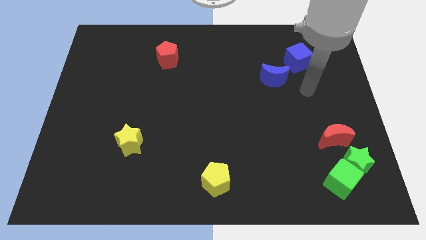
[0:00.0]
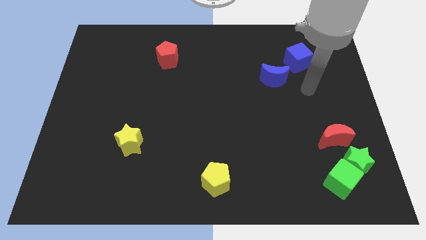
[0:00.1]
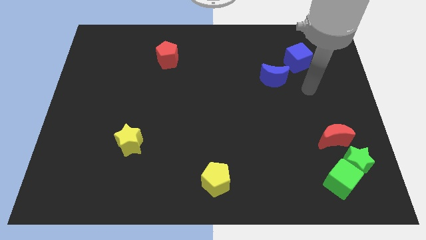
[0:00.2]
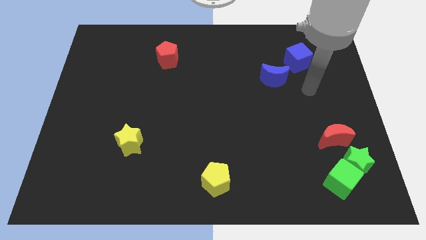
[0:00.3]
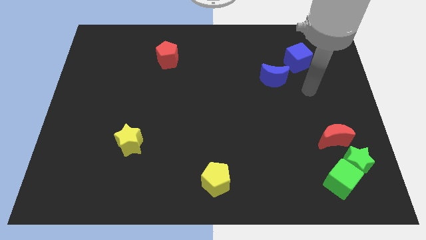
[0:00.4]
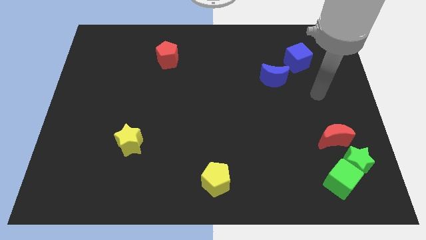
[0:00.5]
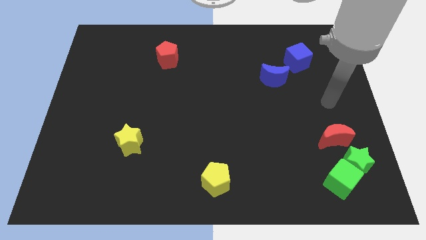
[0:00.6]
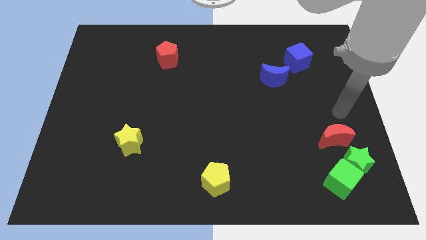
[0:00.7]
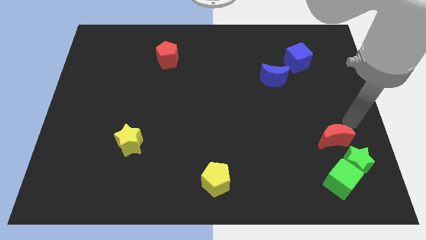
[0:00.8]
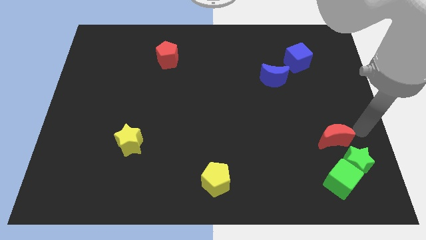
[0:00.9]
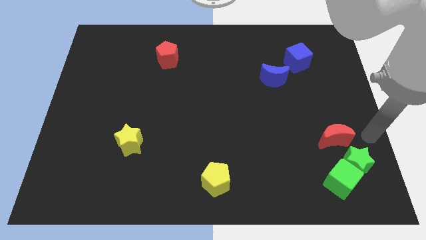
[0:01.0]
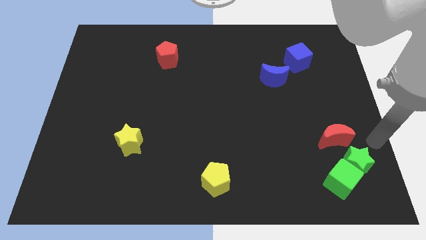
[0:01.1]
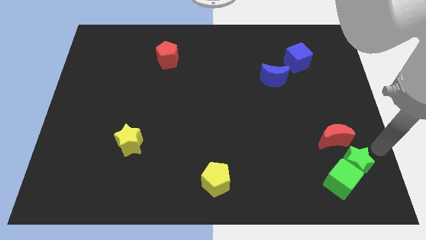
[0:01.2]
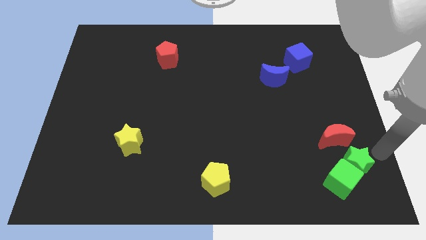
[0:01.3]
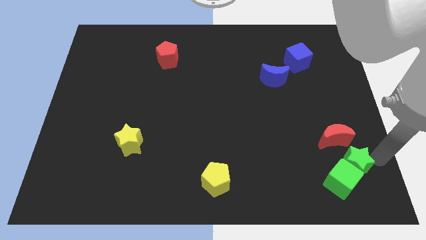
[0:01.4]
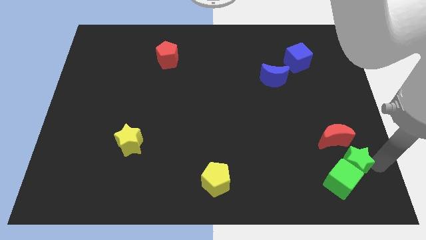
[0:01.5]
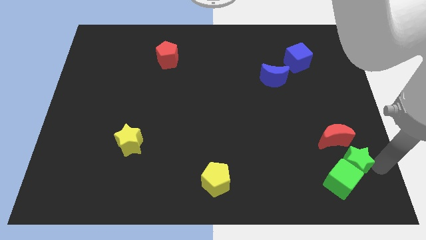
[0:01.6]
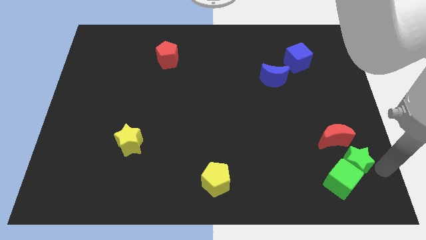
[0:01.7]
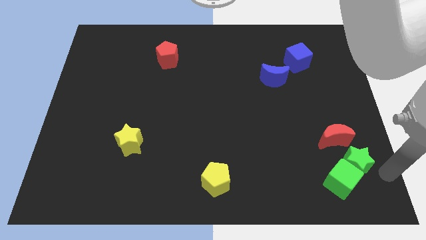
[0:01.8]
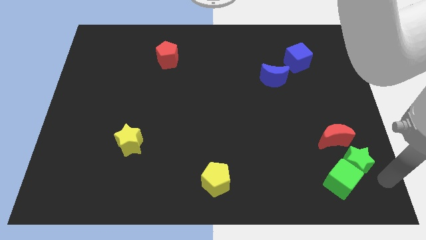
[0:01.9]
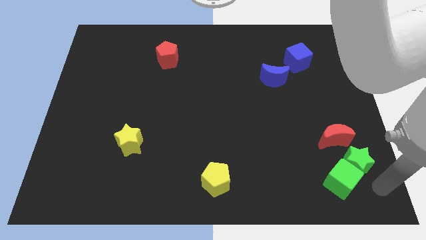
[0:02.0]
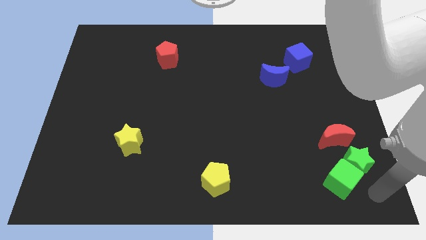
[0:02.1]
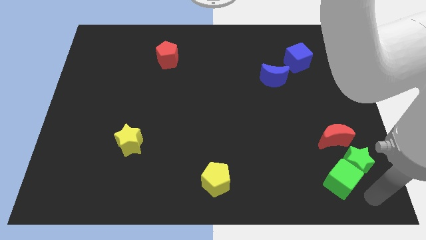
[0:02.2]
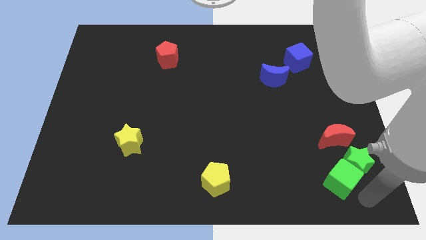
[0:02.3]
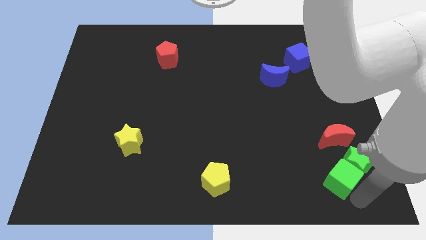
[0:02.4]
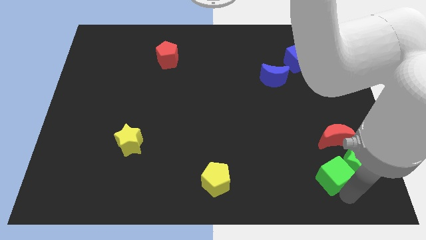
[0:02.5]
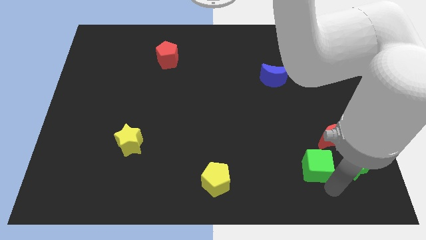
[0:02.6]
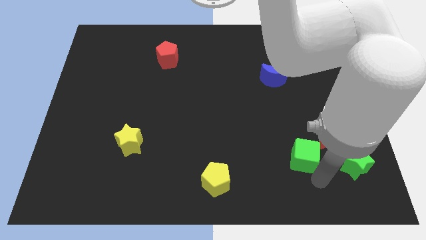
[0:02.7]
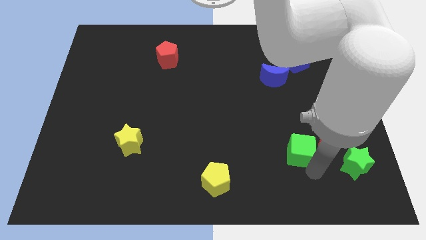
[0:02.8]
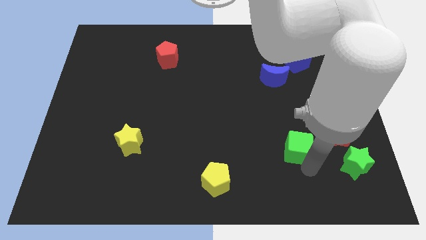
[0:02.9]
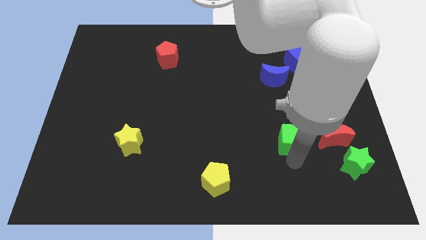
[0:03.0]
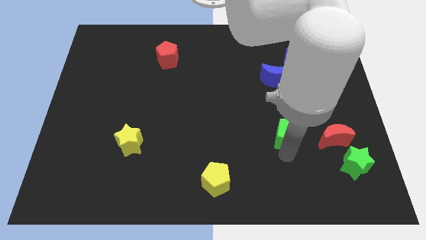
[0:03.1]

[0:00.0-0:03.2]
move the green cube to the left of red crescent

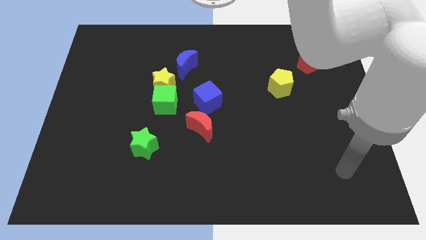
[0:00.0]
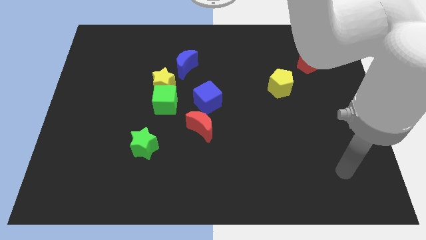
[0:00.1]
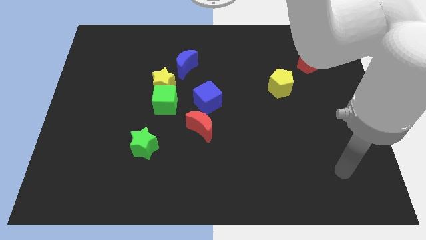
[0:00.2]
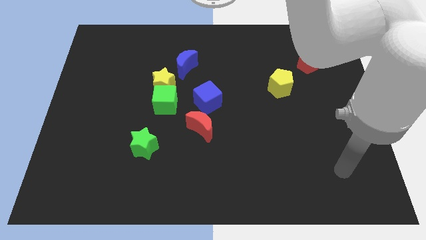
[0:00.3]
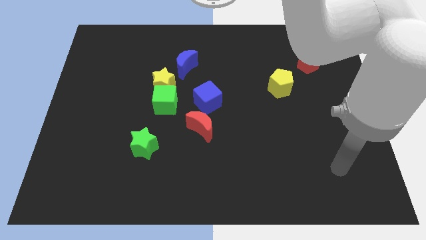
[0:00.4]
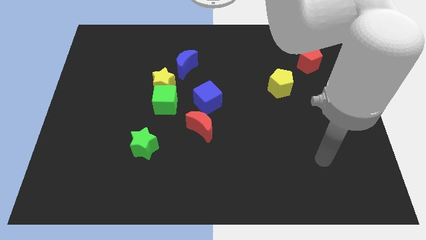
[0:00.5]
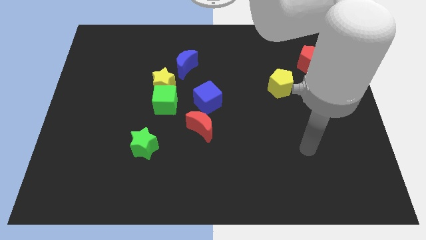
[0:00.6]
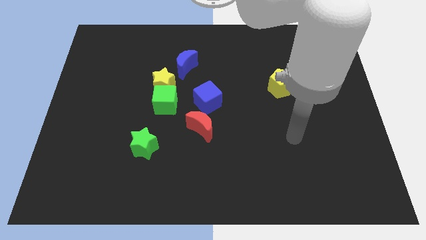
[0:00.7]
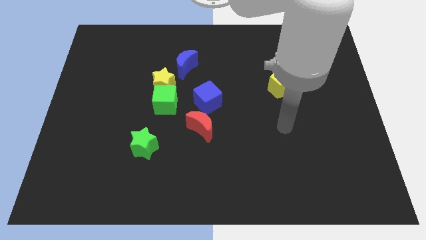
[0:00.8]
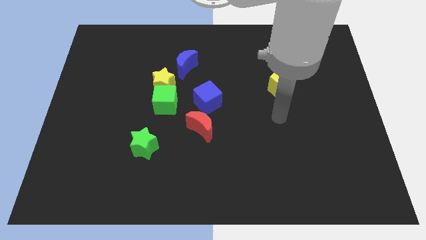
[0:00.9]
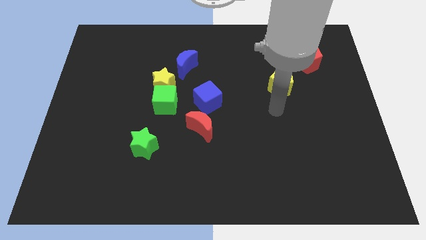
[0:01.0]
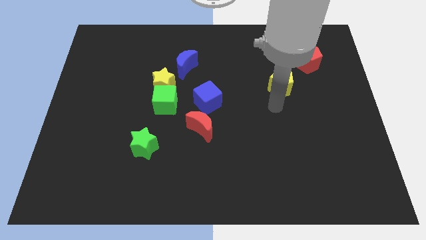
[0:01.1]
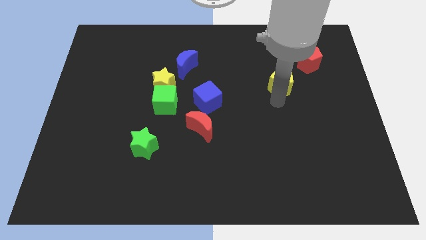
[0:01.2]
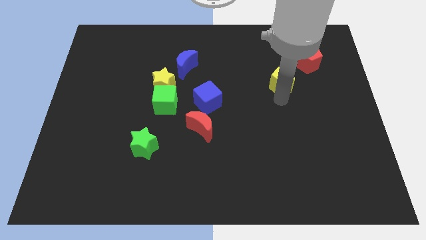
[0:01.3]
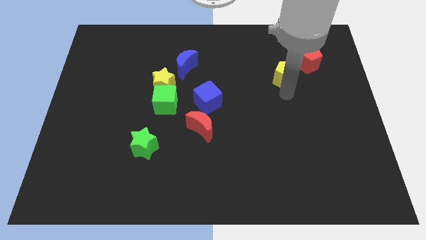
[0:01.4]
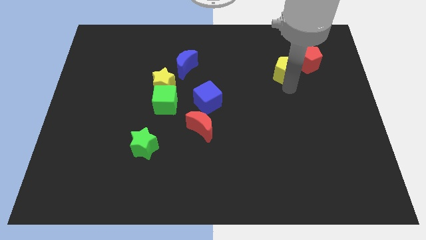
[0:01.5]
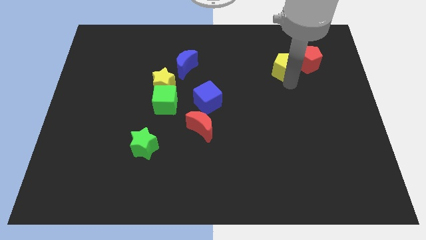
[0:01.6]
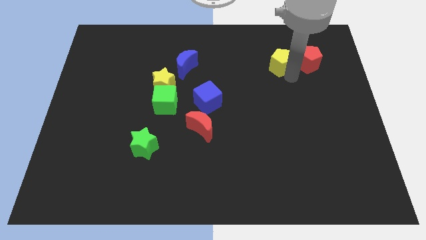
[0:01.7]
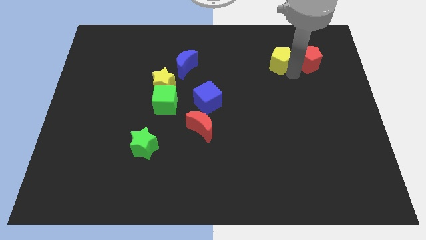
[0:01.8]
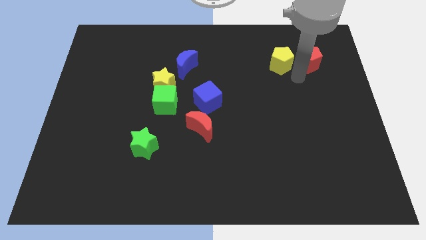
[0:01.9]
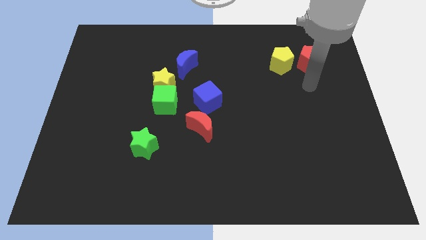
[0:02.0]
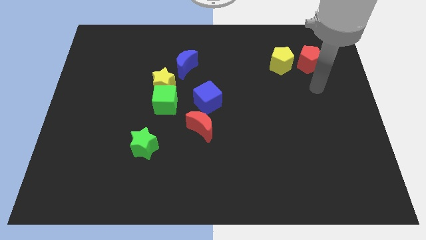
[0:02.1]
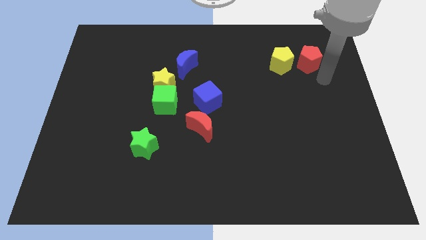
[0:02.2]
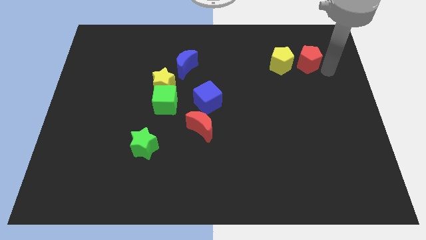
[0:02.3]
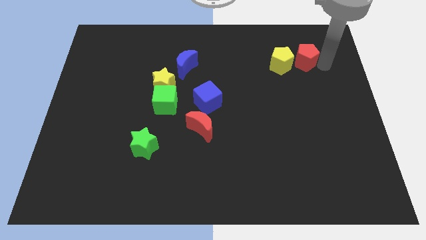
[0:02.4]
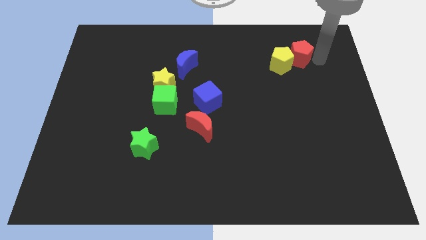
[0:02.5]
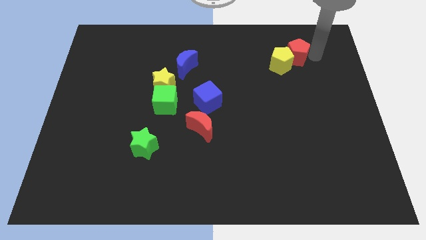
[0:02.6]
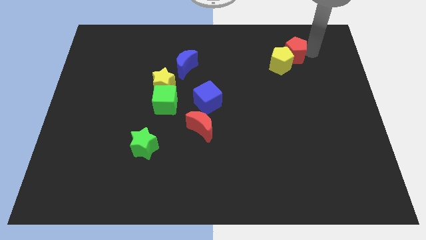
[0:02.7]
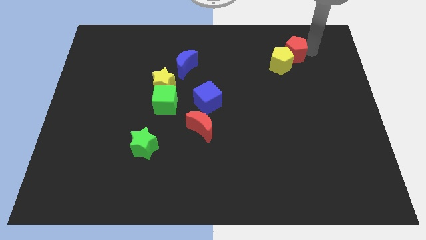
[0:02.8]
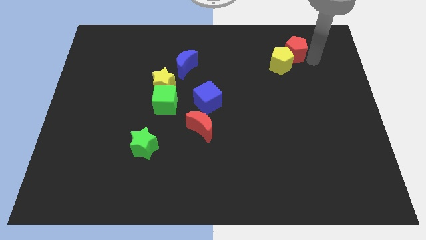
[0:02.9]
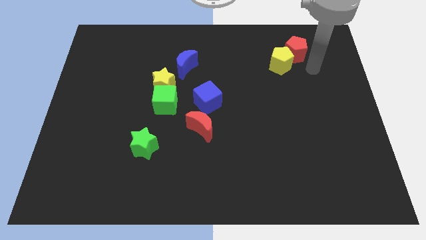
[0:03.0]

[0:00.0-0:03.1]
push yellow pentagon beside red pentagon

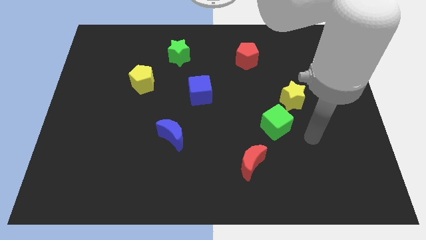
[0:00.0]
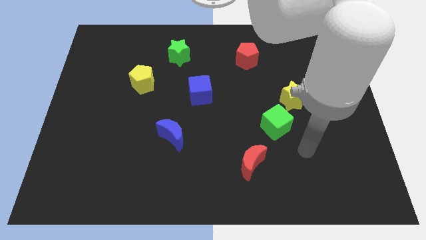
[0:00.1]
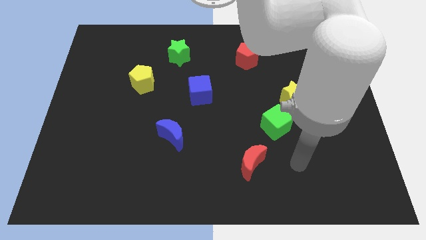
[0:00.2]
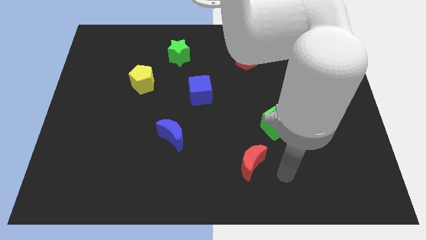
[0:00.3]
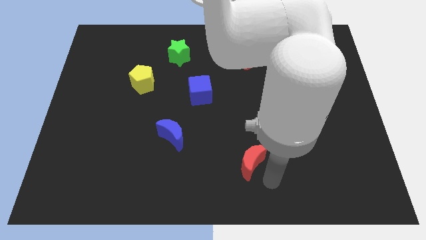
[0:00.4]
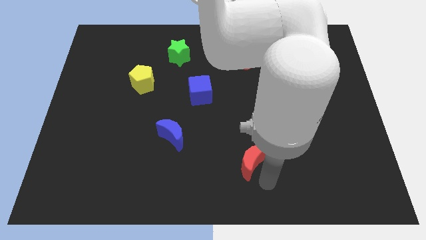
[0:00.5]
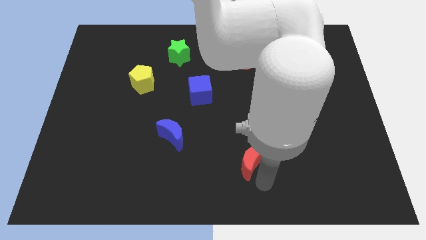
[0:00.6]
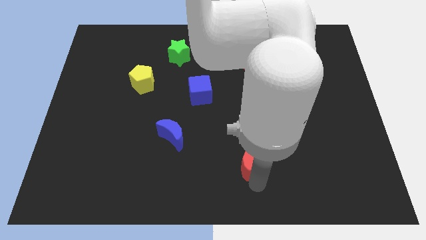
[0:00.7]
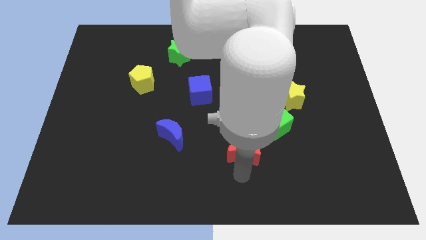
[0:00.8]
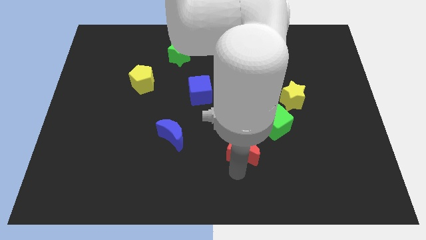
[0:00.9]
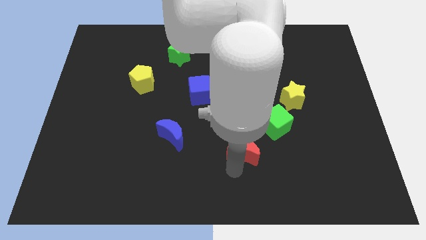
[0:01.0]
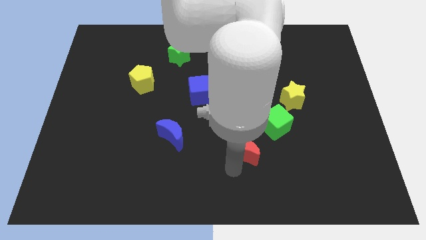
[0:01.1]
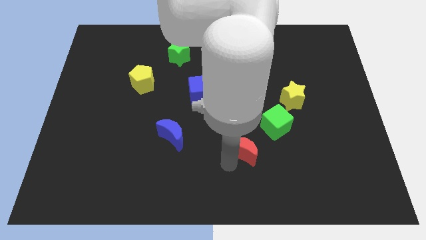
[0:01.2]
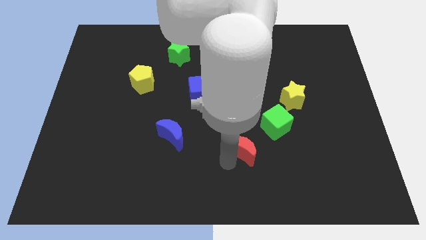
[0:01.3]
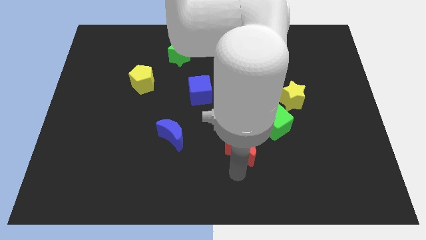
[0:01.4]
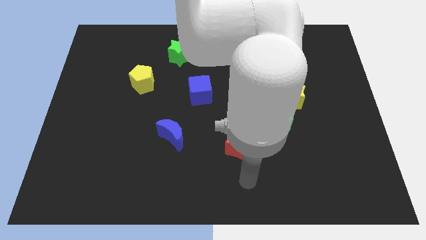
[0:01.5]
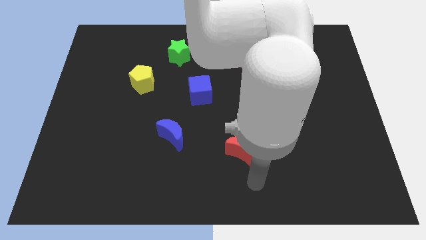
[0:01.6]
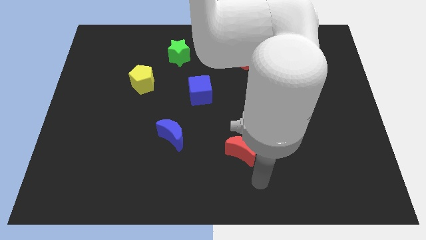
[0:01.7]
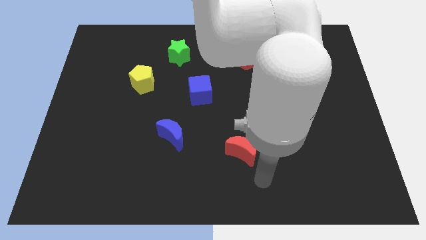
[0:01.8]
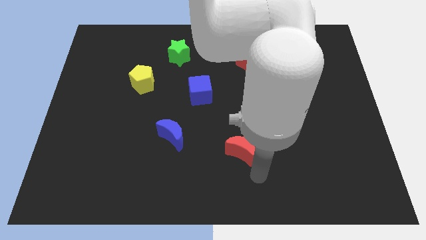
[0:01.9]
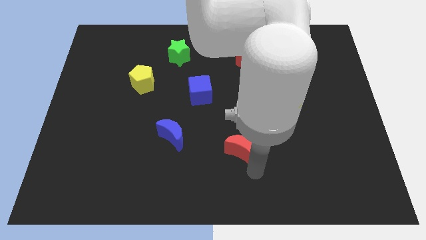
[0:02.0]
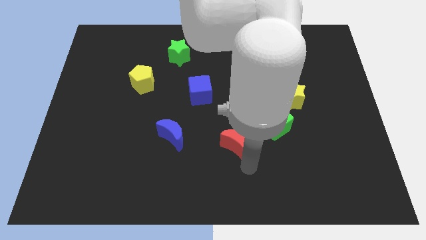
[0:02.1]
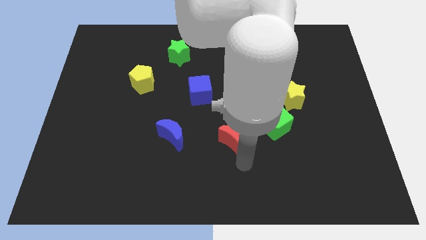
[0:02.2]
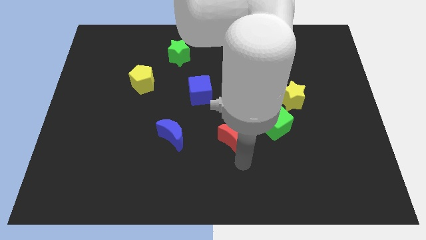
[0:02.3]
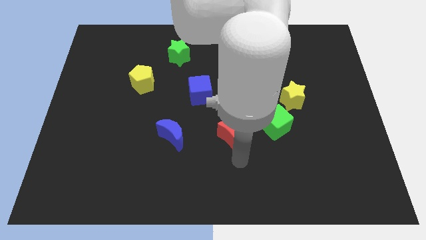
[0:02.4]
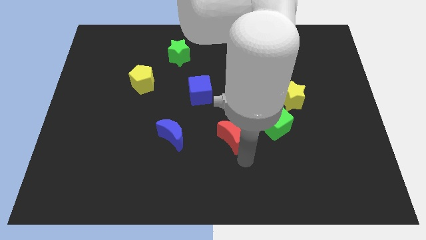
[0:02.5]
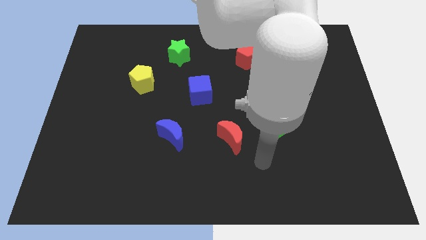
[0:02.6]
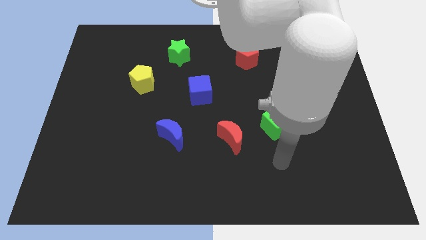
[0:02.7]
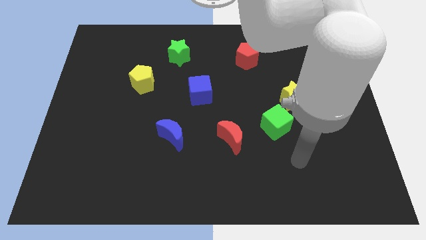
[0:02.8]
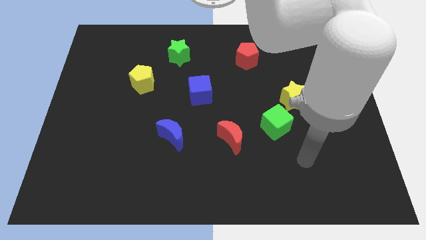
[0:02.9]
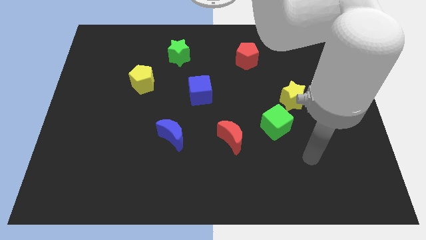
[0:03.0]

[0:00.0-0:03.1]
slide the red moon to the right side of the blue moon
